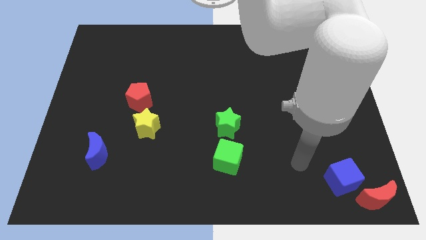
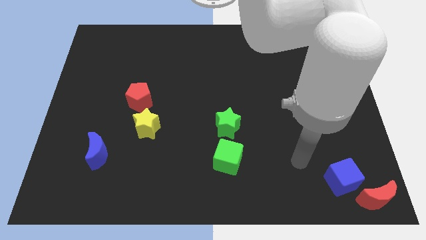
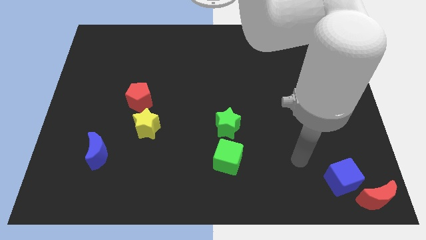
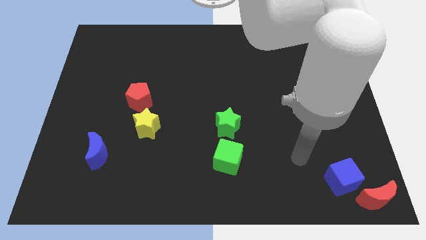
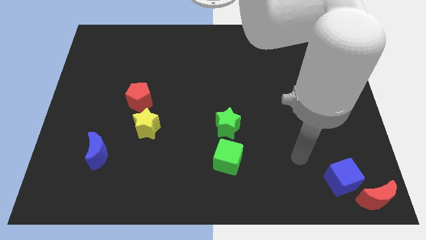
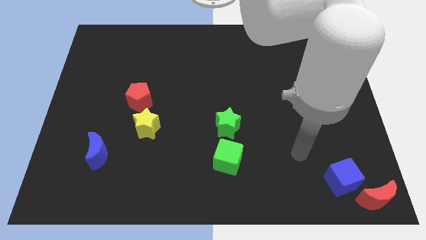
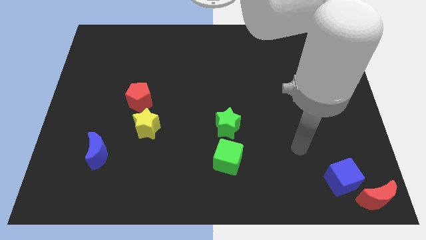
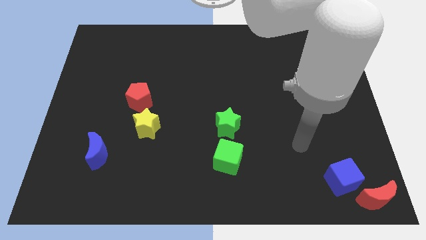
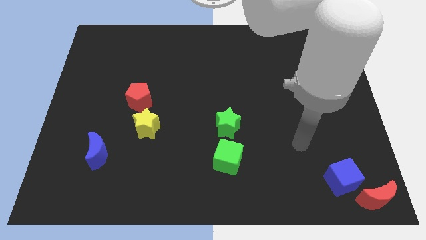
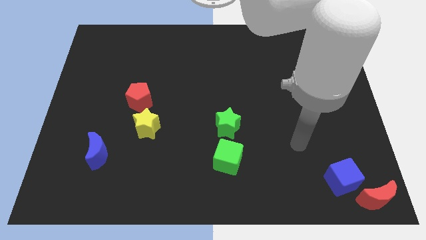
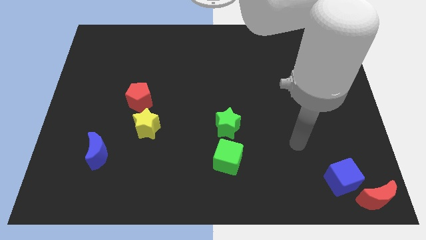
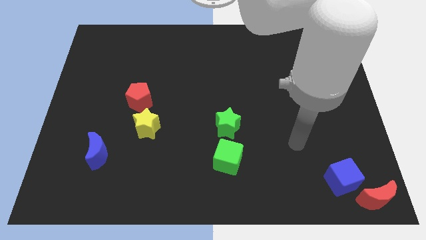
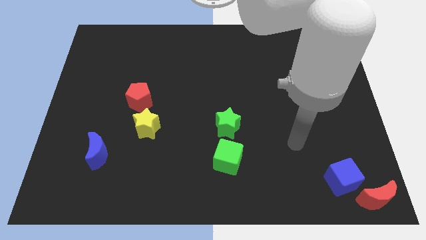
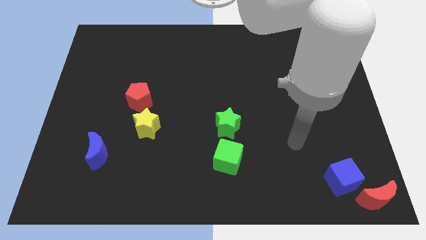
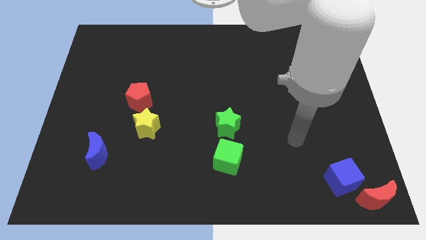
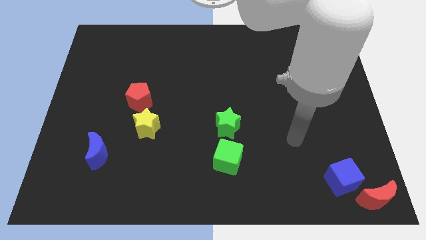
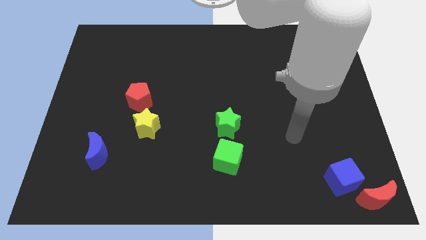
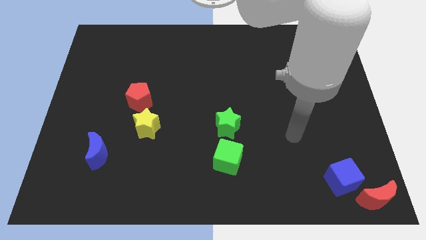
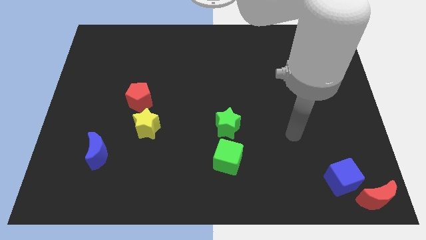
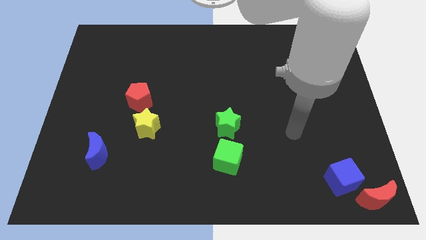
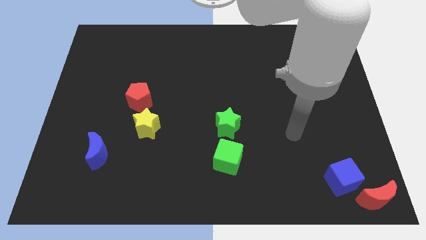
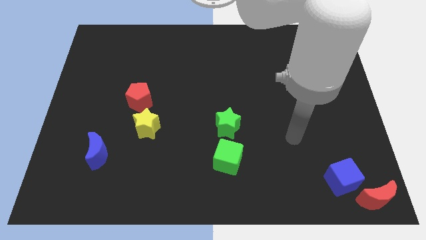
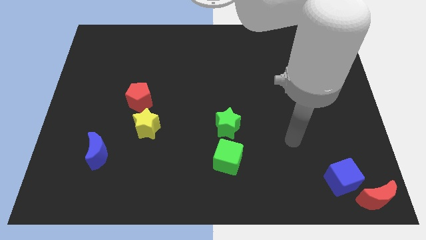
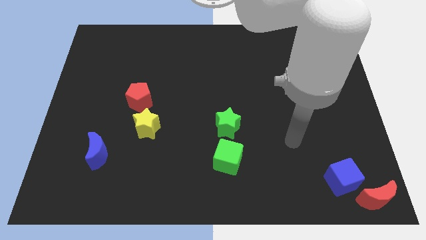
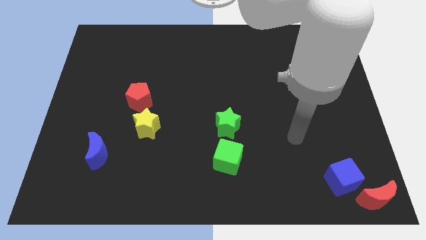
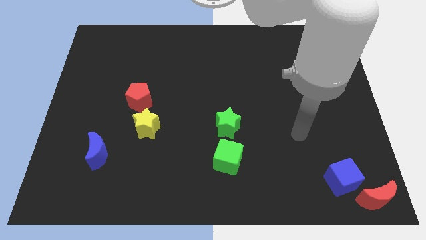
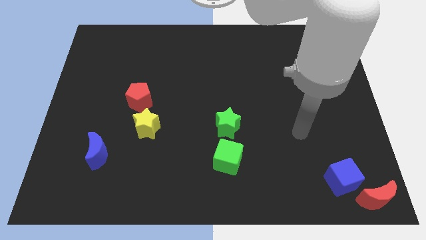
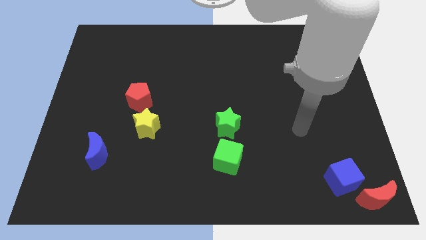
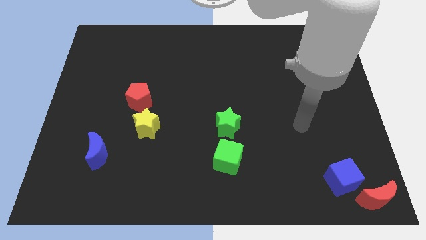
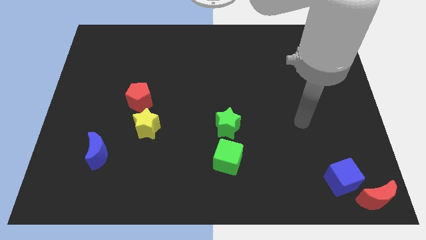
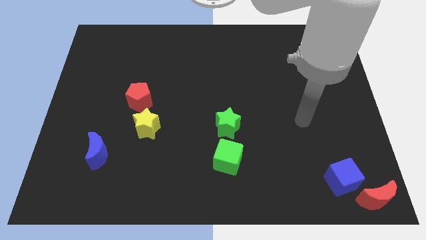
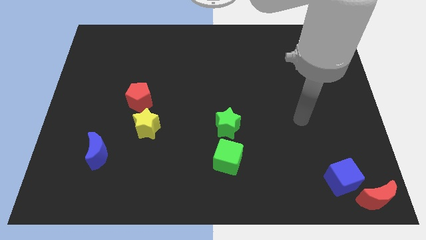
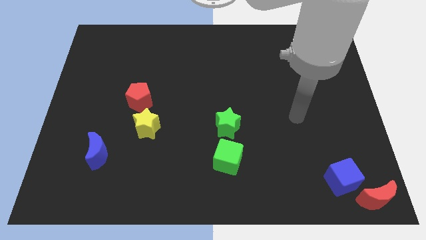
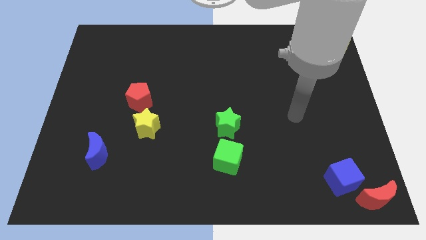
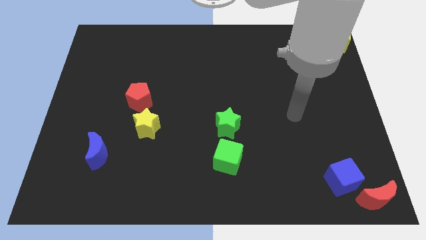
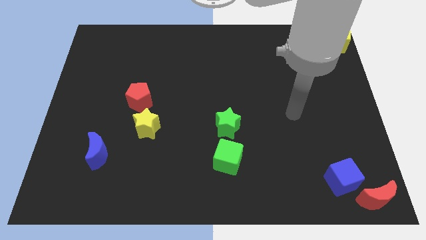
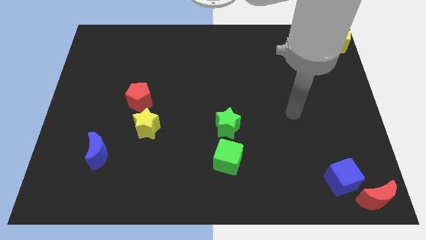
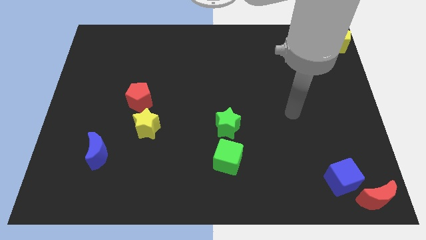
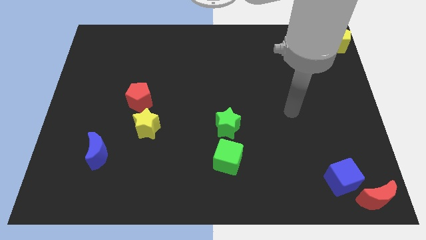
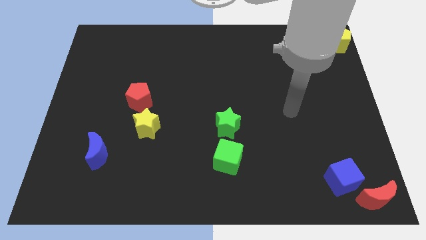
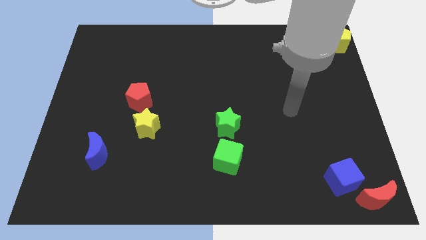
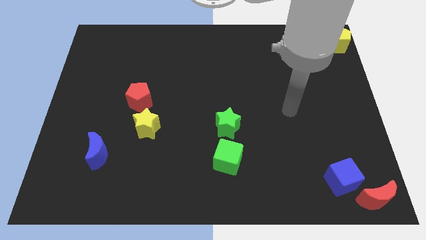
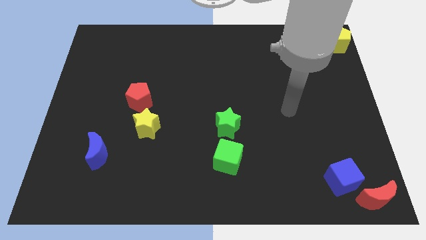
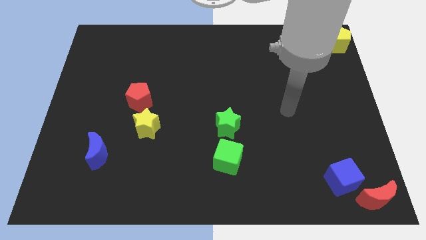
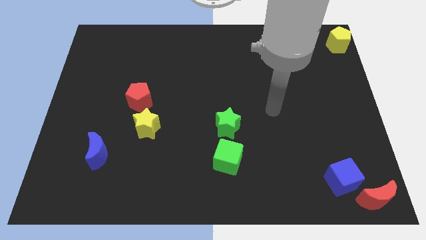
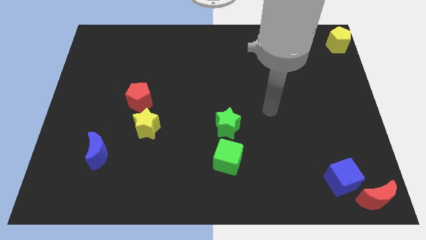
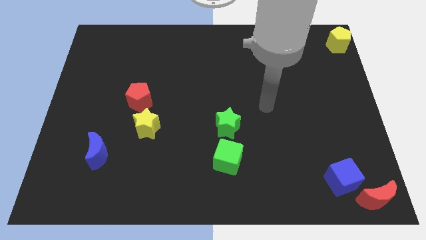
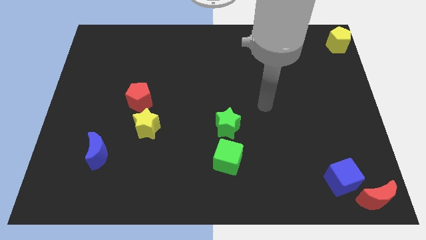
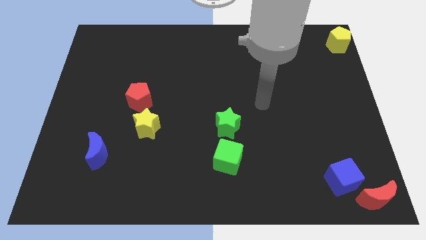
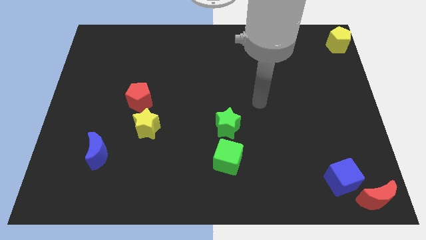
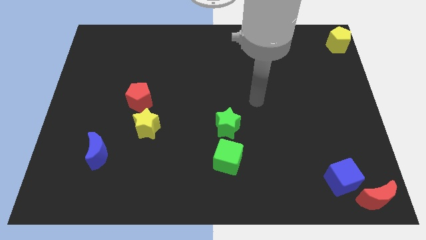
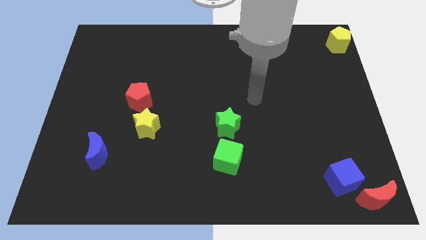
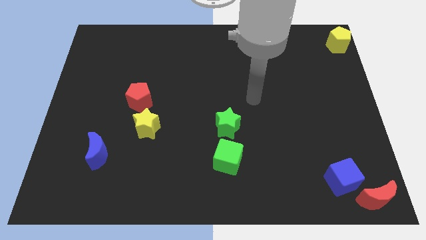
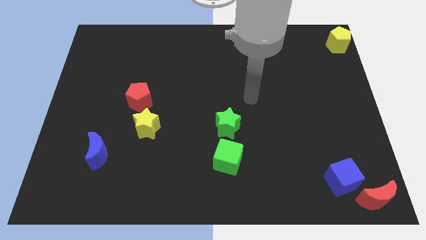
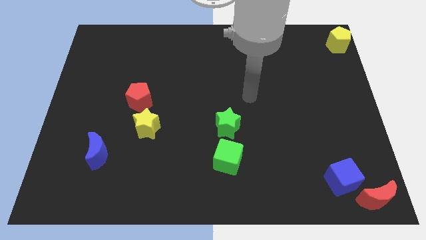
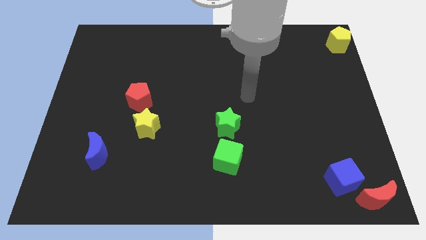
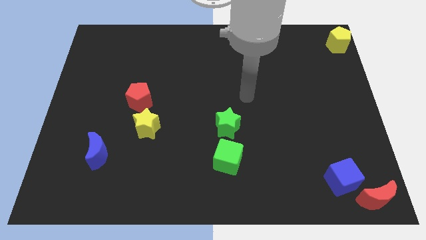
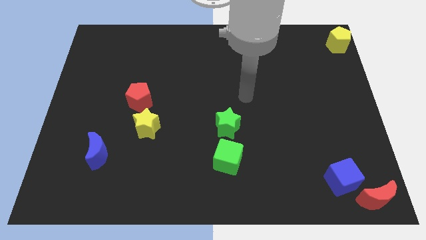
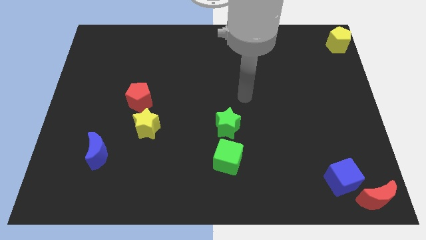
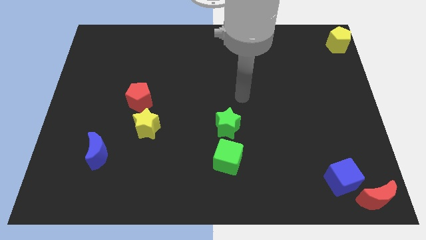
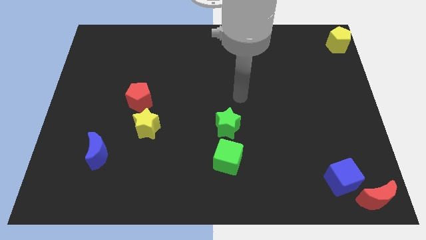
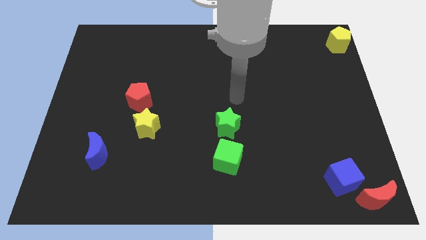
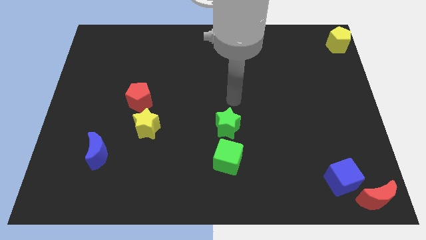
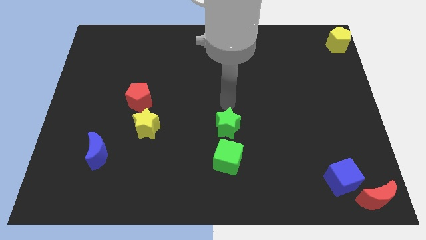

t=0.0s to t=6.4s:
point your arm at the top of the green star

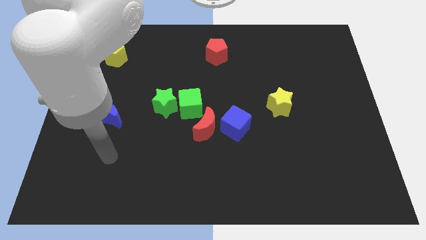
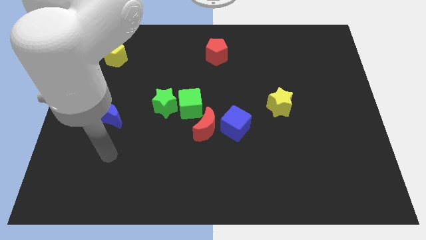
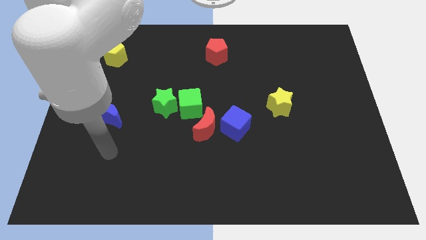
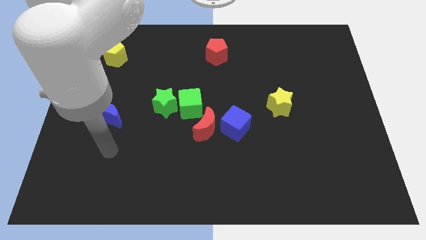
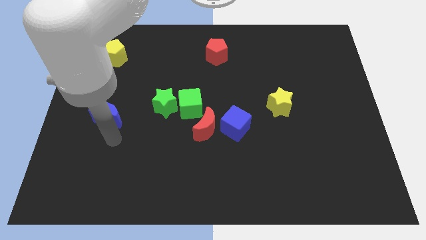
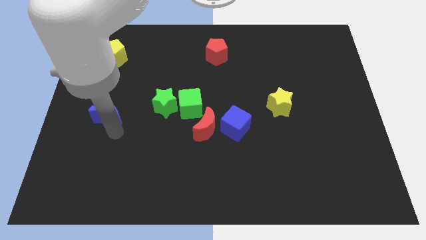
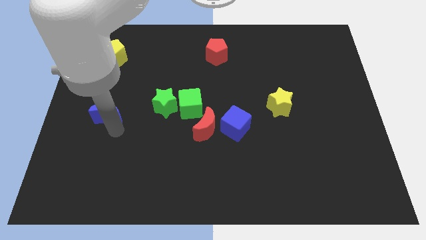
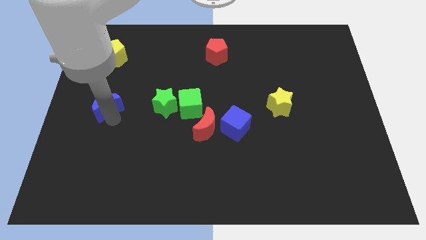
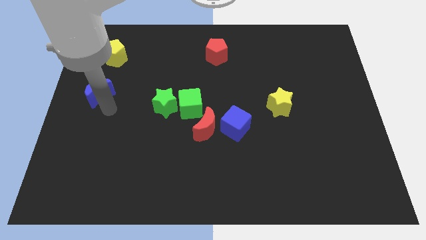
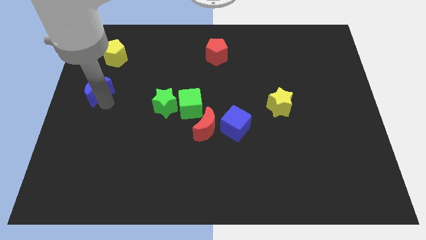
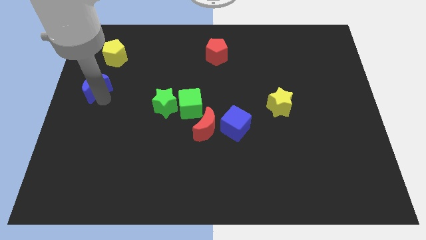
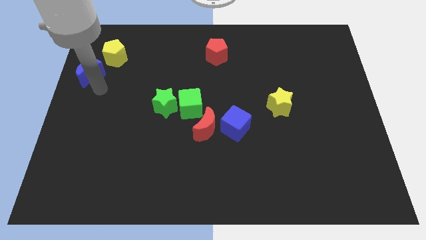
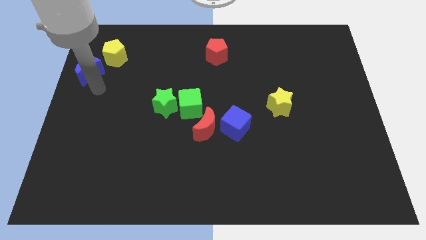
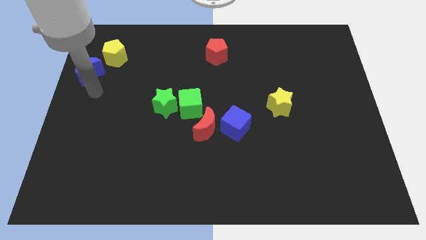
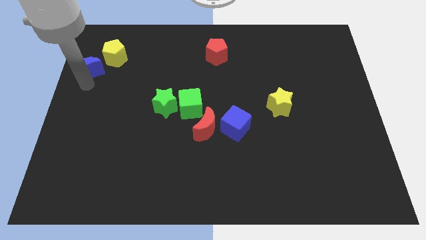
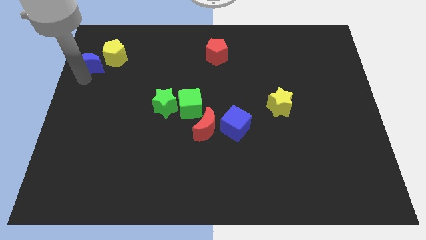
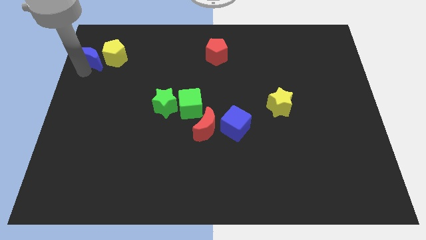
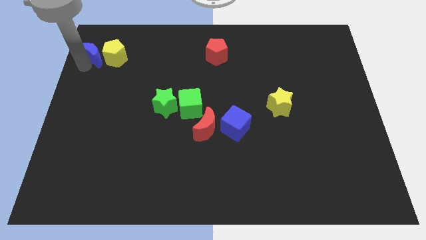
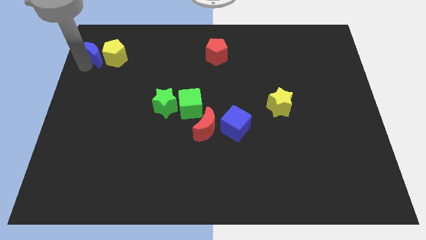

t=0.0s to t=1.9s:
place the blue moon to the left of the yellow pentagon

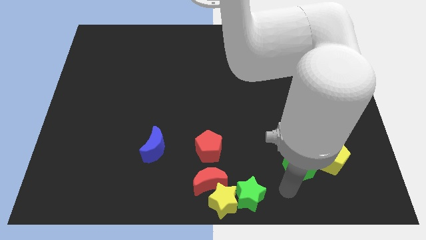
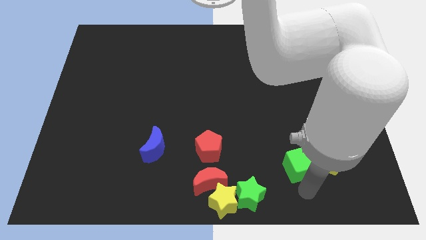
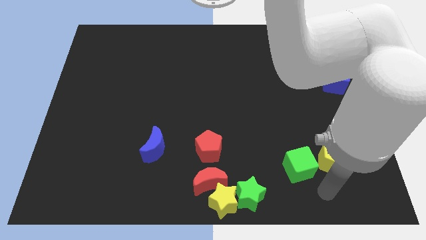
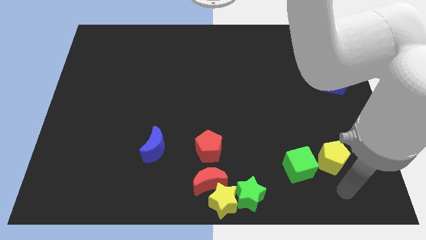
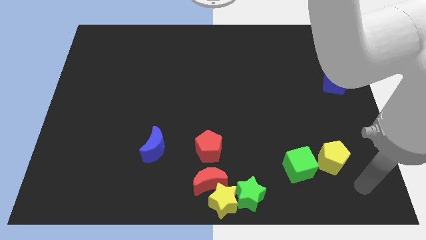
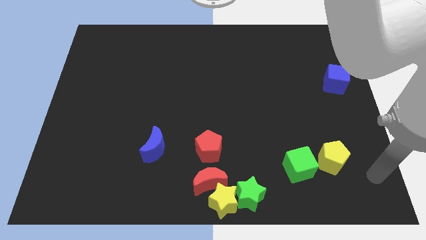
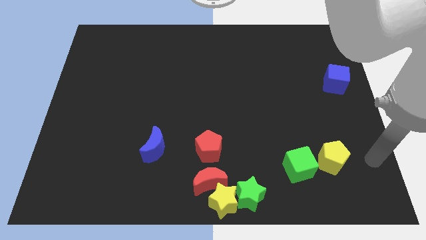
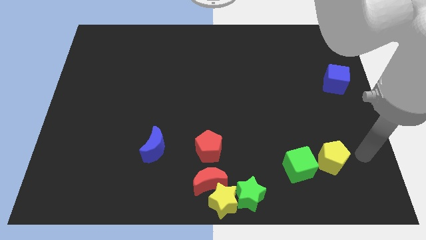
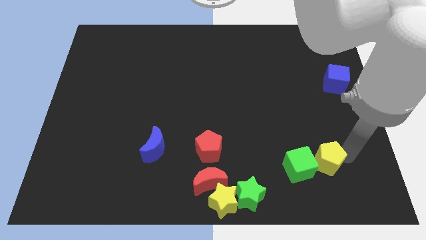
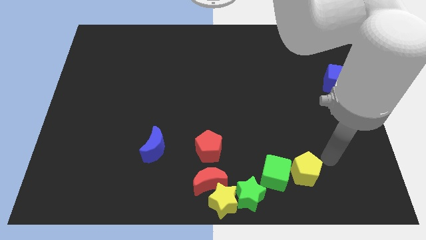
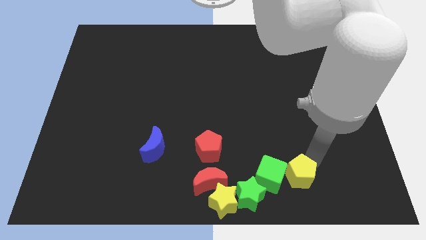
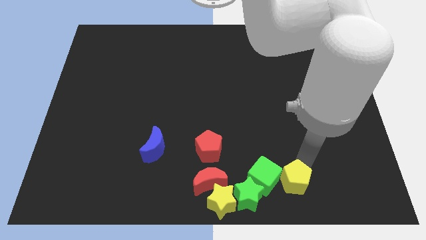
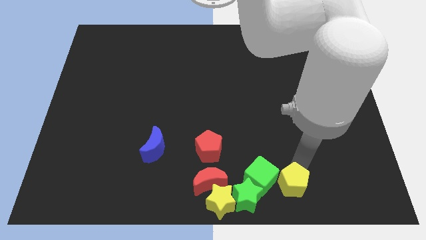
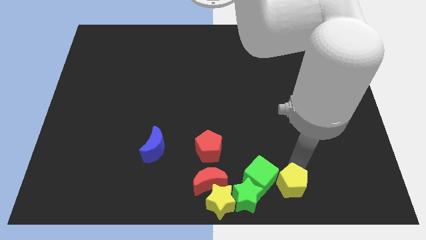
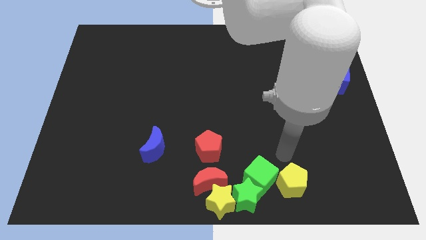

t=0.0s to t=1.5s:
push the green cube and yellow pentagon into the green star
